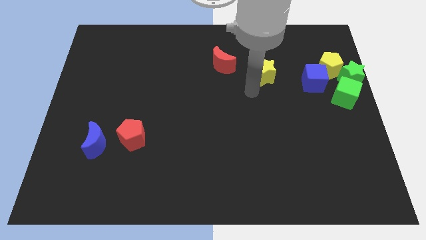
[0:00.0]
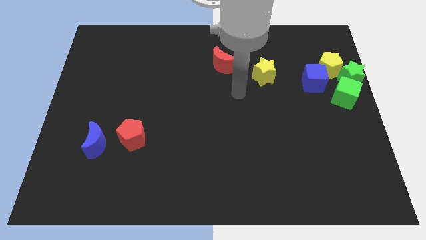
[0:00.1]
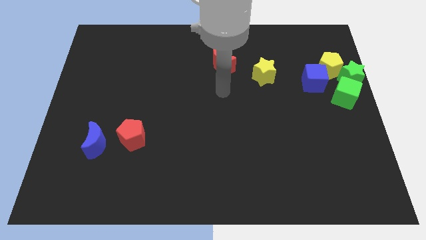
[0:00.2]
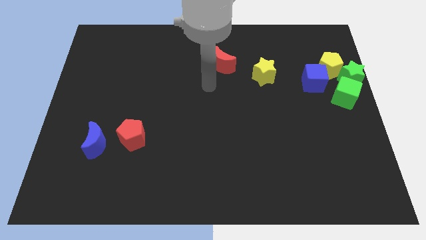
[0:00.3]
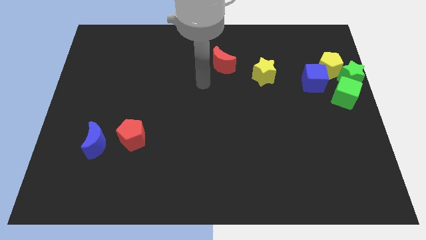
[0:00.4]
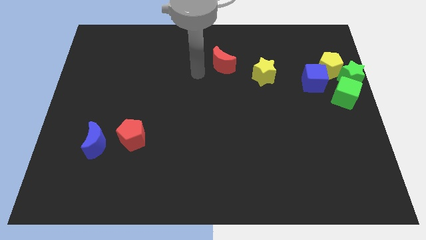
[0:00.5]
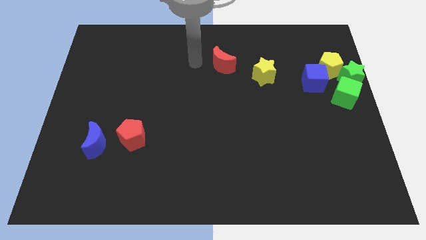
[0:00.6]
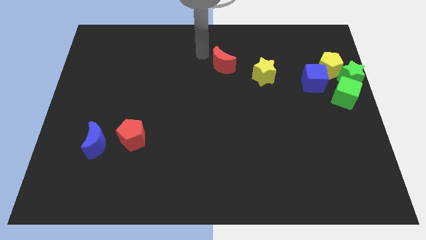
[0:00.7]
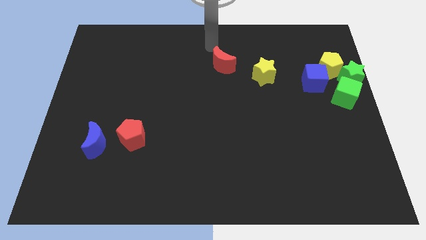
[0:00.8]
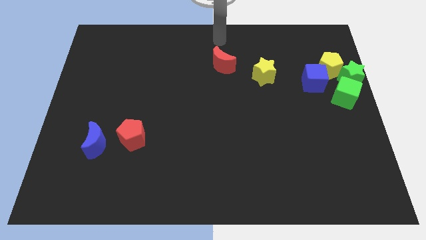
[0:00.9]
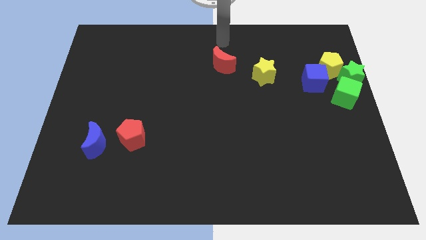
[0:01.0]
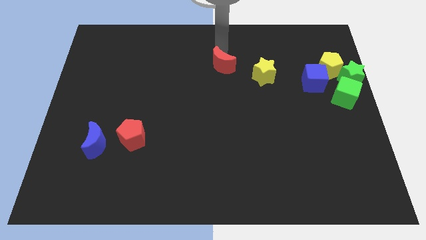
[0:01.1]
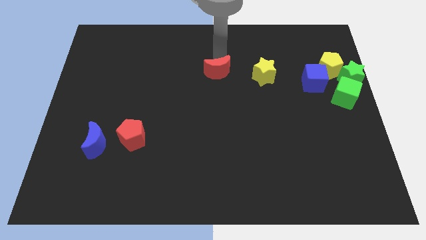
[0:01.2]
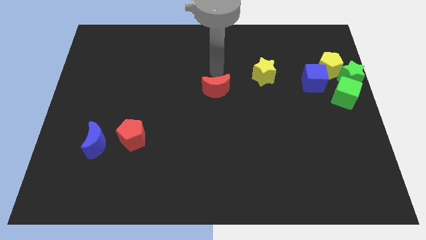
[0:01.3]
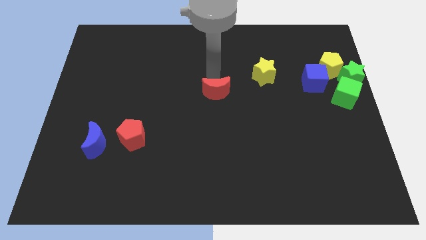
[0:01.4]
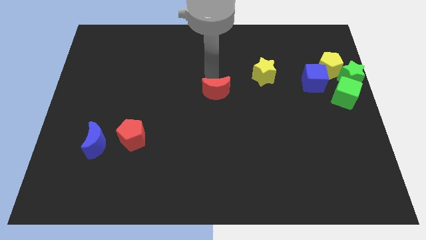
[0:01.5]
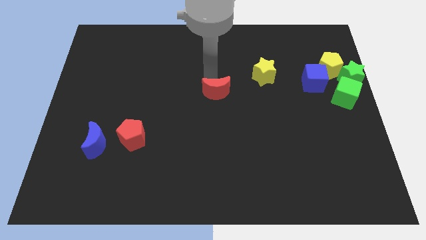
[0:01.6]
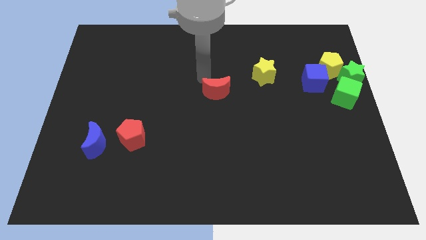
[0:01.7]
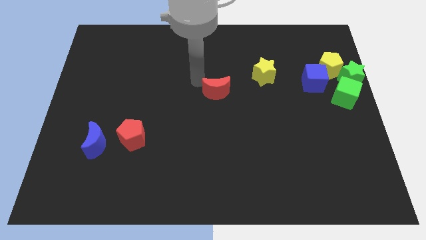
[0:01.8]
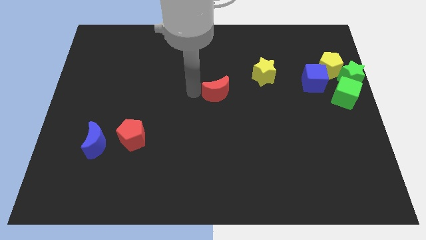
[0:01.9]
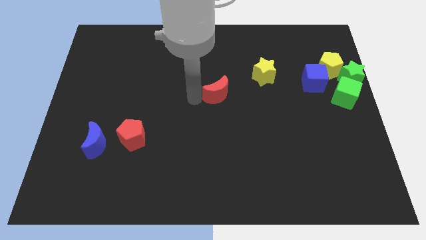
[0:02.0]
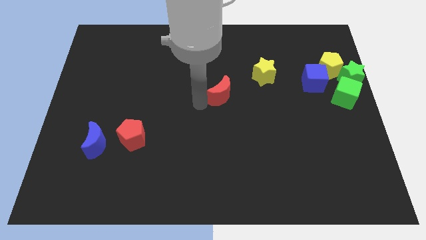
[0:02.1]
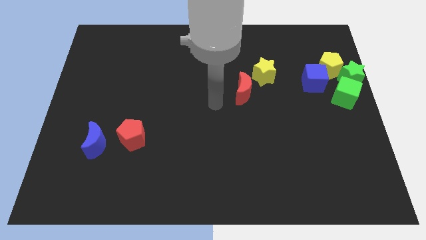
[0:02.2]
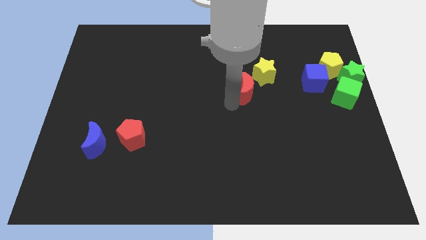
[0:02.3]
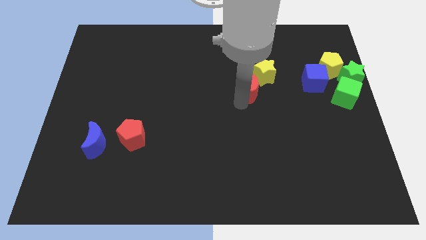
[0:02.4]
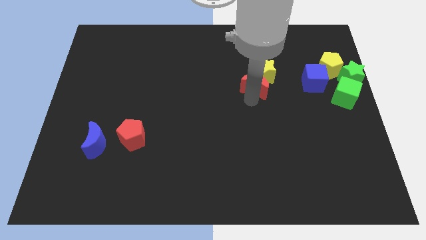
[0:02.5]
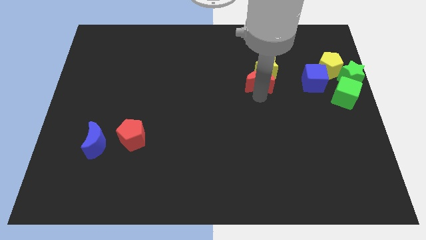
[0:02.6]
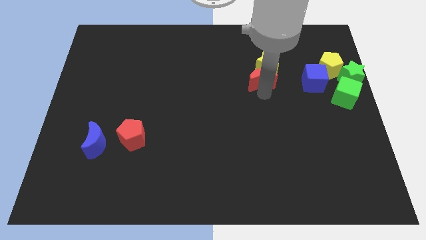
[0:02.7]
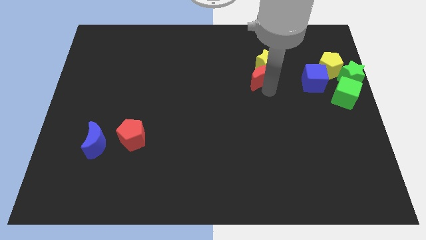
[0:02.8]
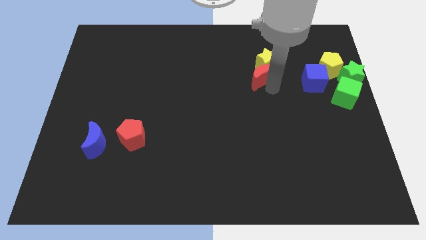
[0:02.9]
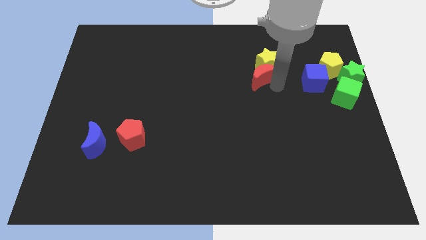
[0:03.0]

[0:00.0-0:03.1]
move the red moon into green star

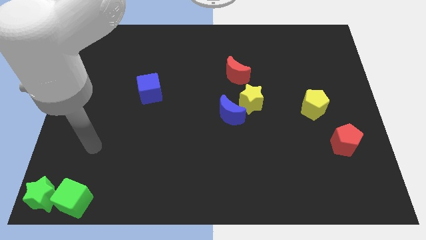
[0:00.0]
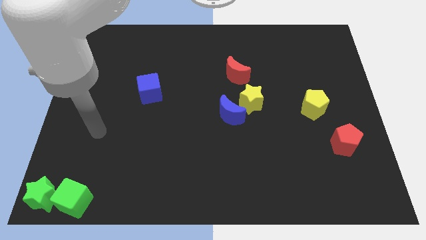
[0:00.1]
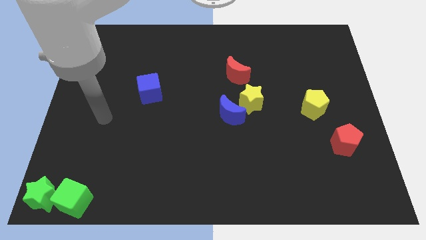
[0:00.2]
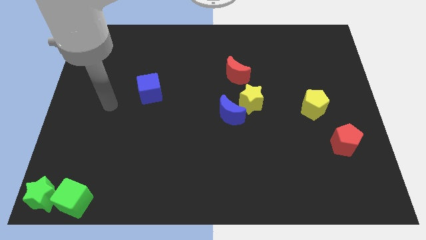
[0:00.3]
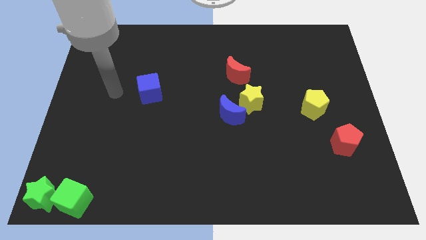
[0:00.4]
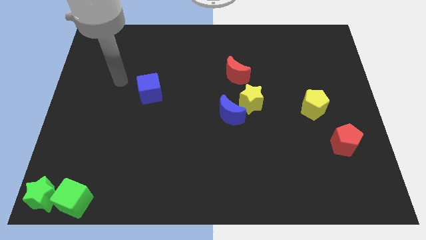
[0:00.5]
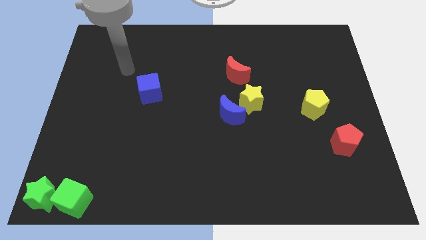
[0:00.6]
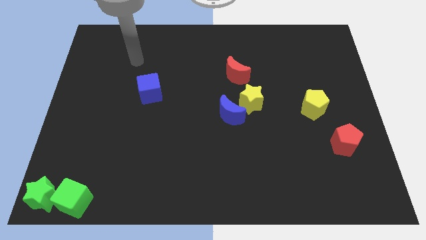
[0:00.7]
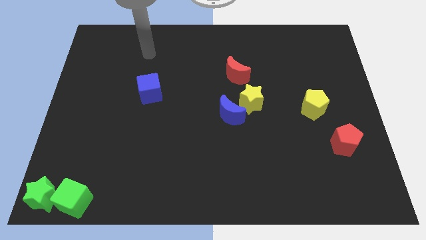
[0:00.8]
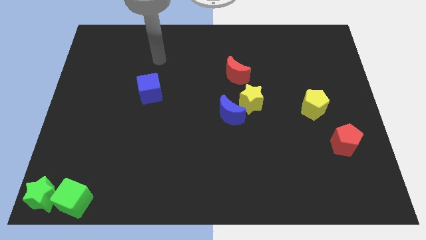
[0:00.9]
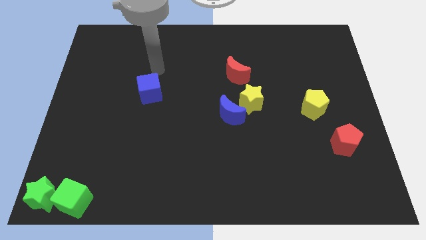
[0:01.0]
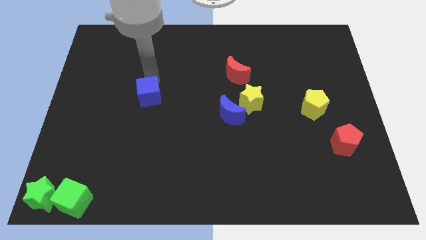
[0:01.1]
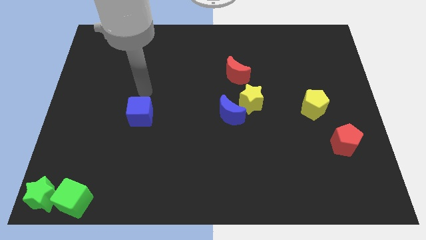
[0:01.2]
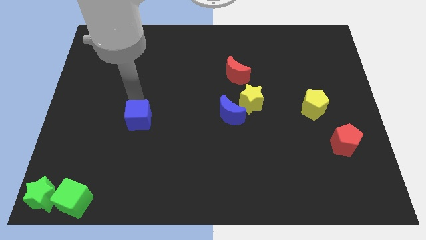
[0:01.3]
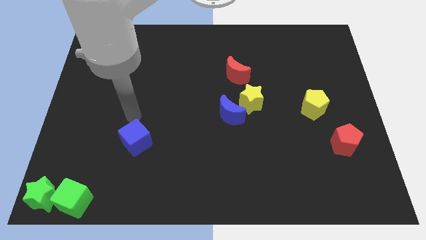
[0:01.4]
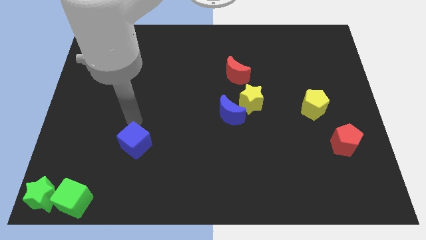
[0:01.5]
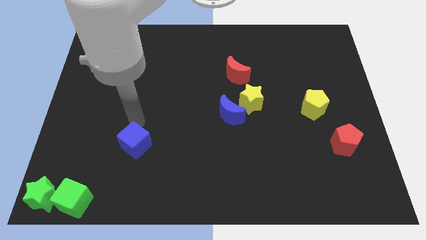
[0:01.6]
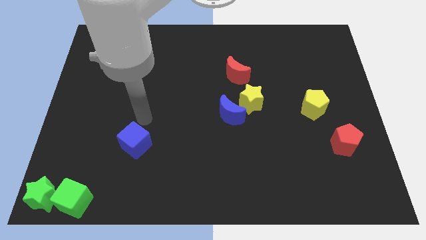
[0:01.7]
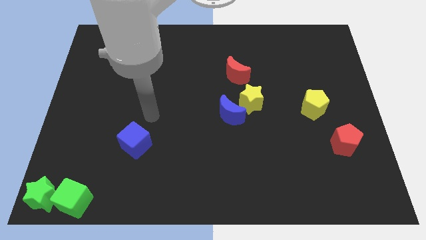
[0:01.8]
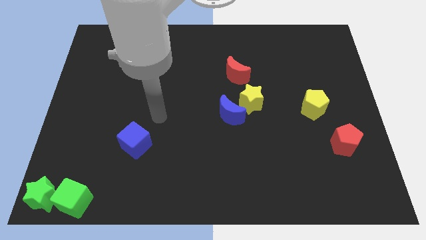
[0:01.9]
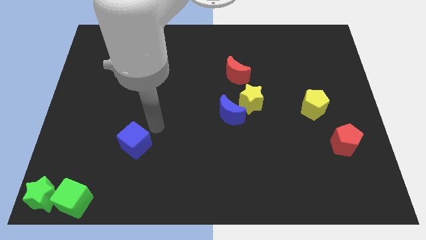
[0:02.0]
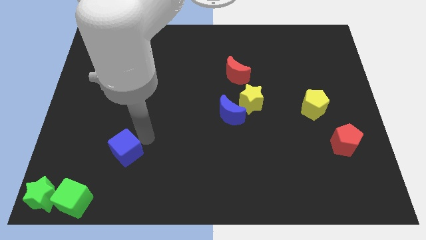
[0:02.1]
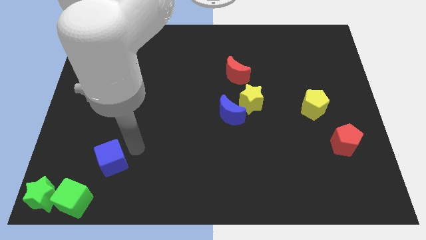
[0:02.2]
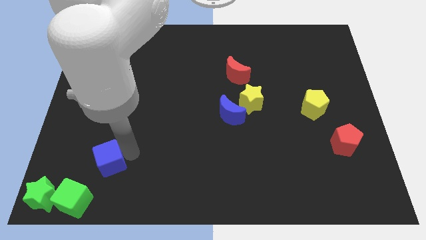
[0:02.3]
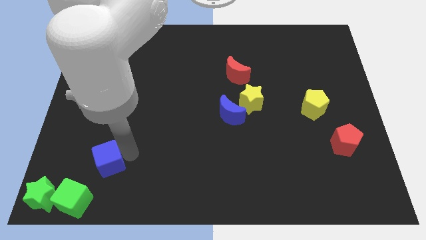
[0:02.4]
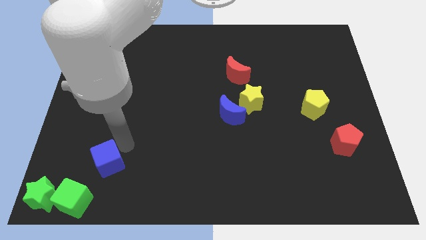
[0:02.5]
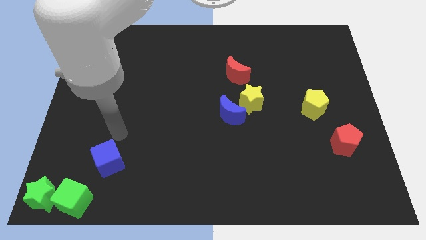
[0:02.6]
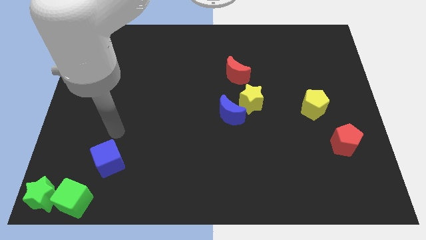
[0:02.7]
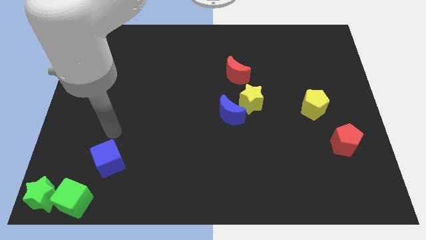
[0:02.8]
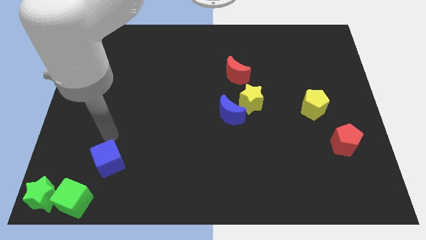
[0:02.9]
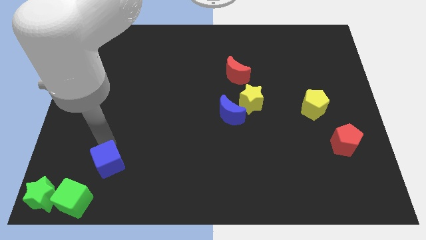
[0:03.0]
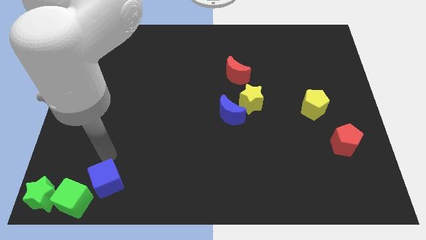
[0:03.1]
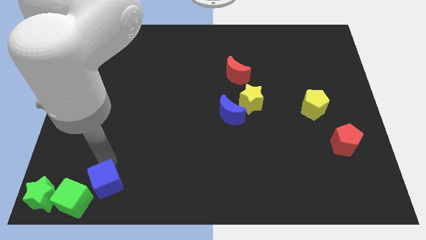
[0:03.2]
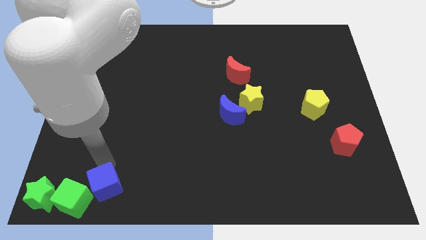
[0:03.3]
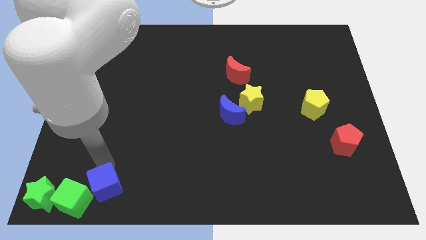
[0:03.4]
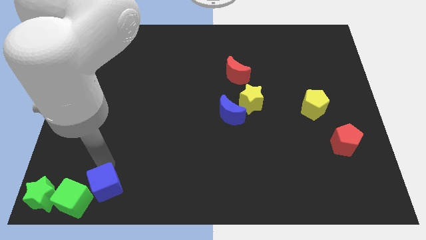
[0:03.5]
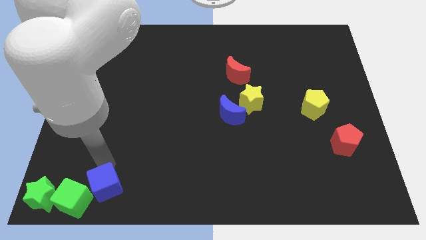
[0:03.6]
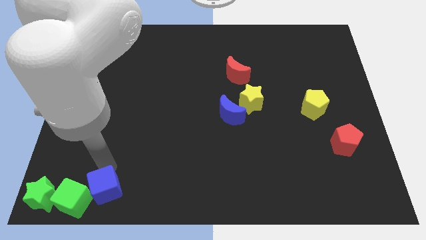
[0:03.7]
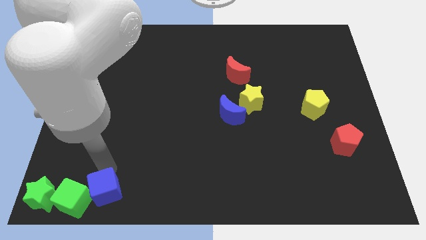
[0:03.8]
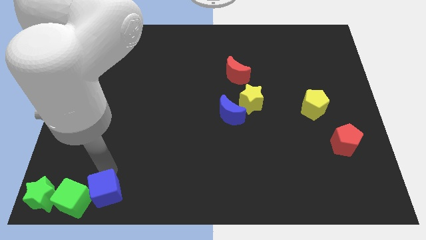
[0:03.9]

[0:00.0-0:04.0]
move the blue cube towards the bottom of the board

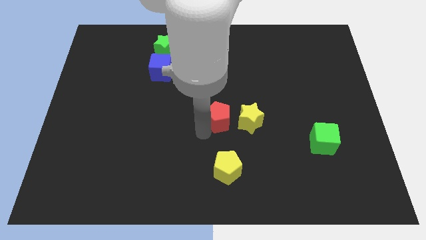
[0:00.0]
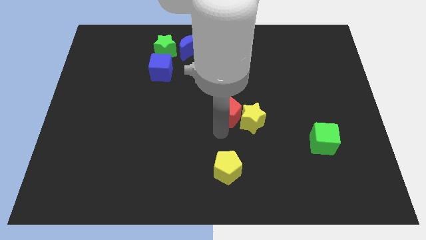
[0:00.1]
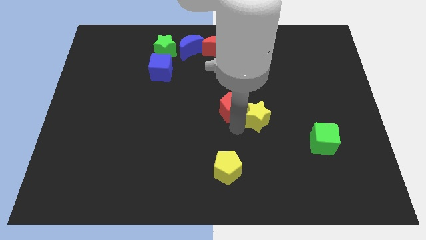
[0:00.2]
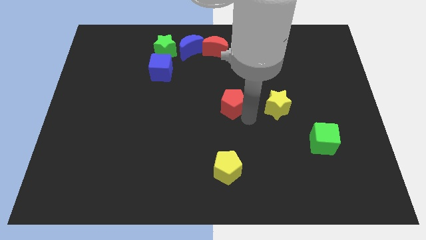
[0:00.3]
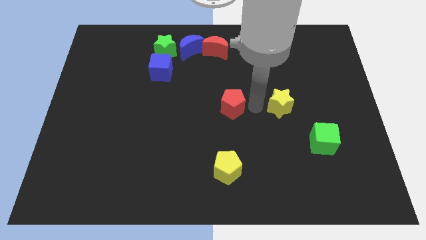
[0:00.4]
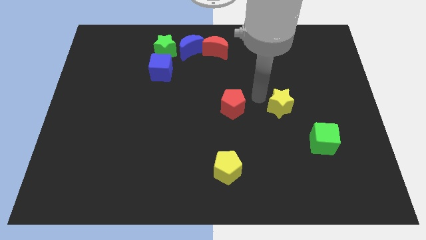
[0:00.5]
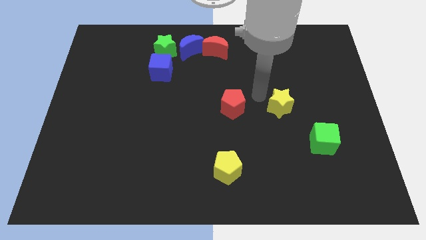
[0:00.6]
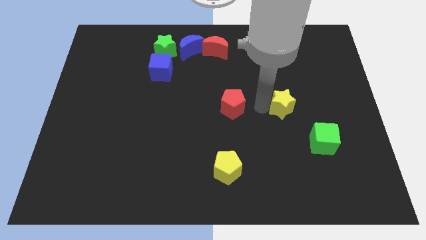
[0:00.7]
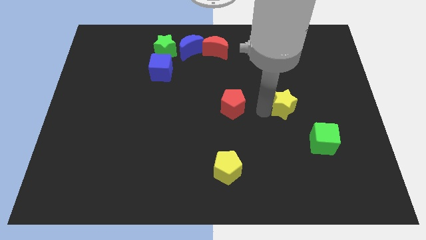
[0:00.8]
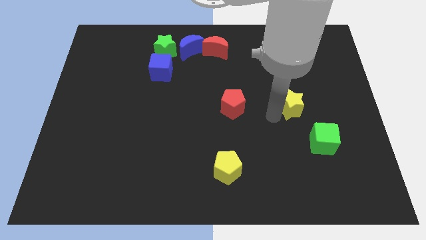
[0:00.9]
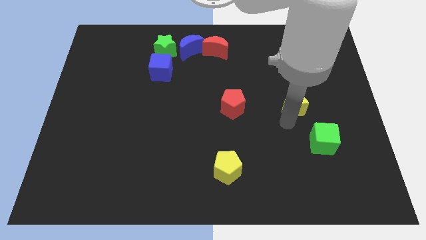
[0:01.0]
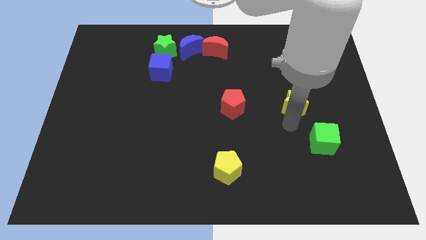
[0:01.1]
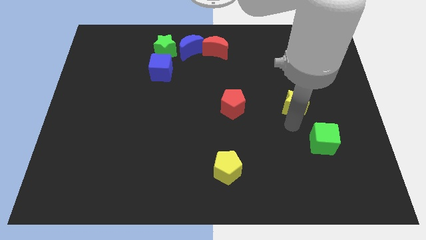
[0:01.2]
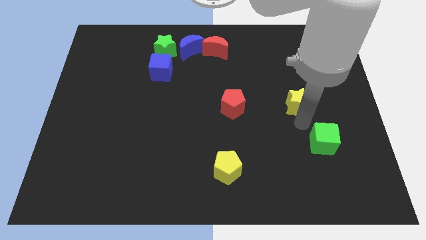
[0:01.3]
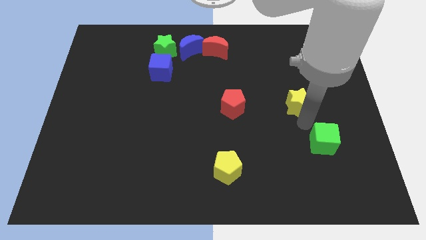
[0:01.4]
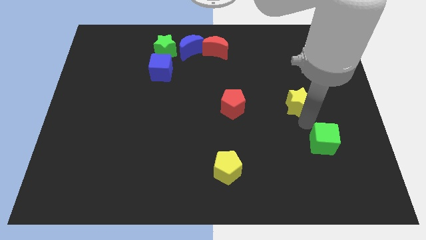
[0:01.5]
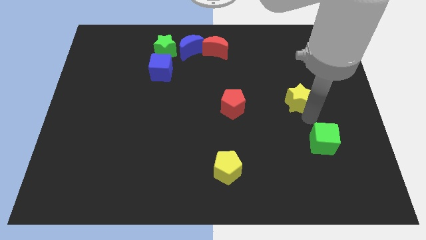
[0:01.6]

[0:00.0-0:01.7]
move the yellow star away from the red pentagon

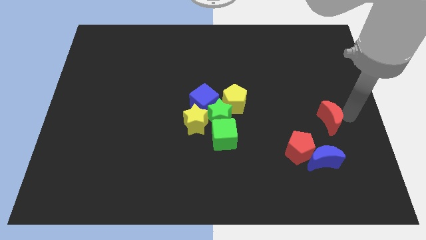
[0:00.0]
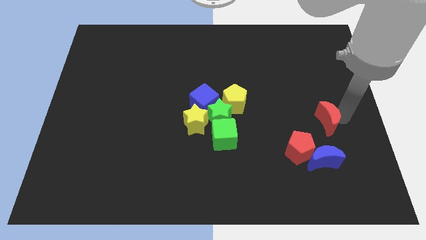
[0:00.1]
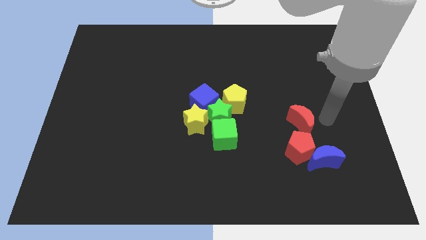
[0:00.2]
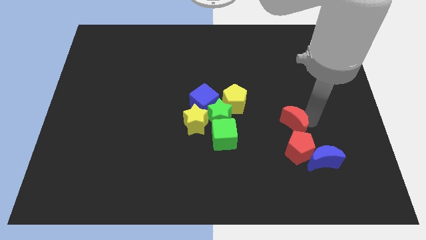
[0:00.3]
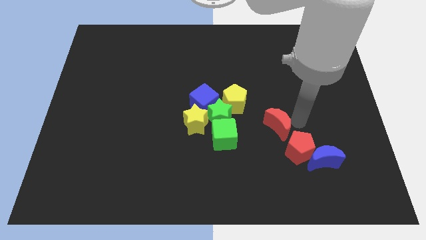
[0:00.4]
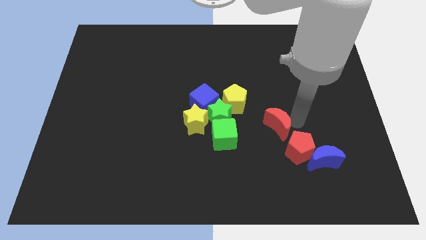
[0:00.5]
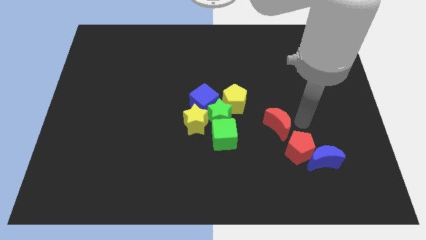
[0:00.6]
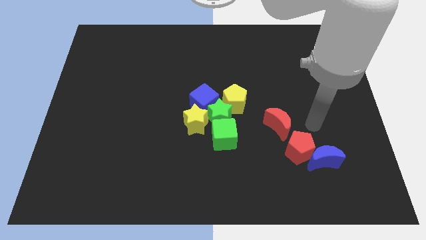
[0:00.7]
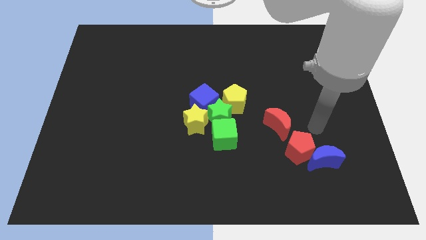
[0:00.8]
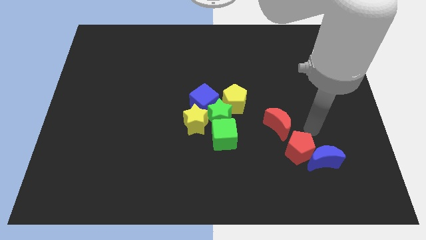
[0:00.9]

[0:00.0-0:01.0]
move red moon to the left diagonal above the red pentagon
